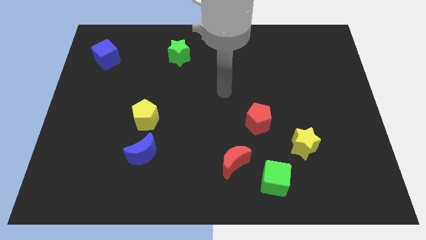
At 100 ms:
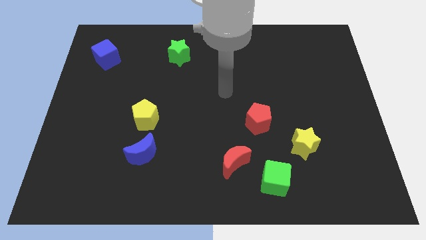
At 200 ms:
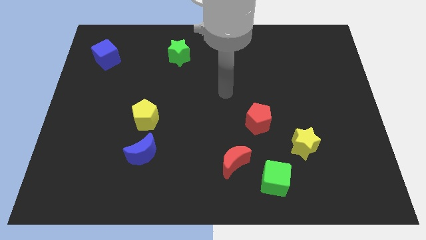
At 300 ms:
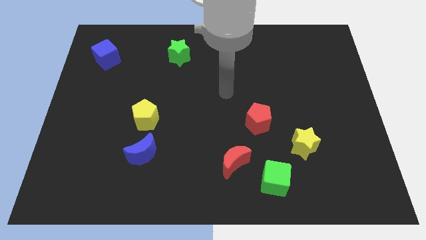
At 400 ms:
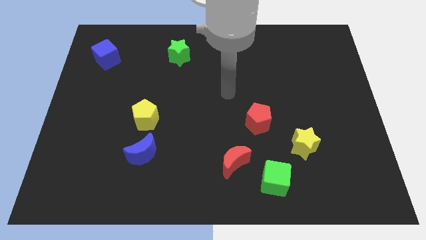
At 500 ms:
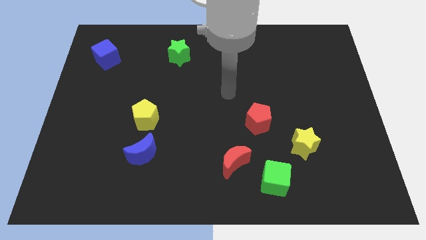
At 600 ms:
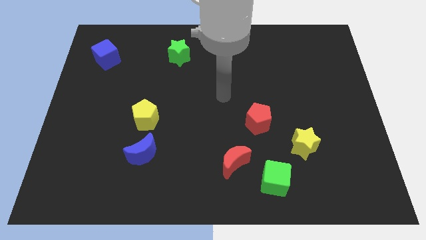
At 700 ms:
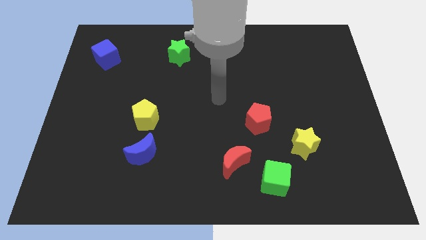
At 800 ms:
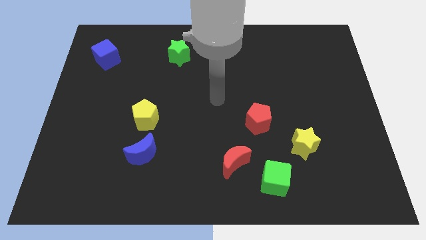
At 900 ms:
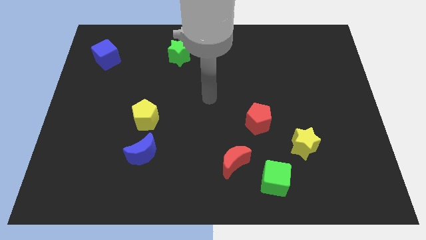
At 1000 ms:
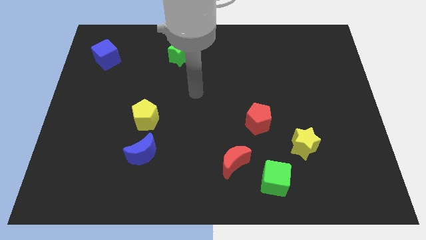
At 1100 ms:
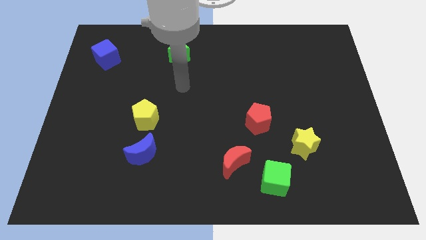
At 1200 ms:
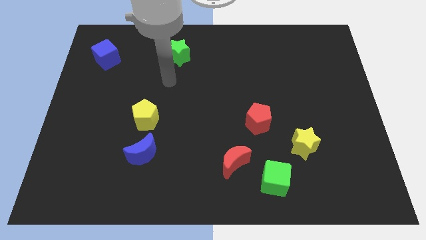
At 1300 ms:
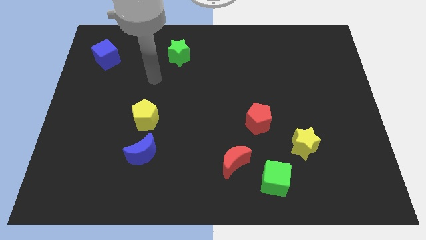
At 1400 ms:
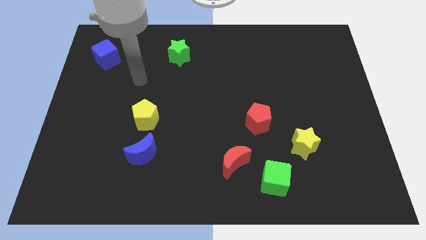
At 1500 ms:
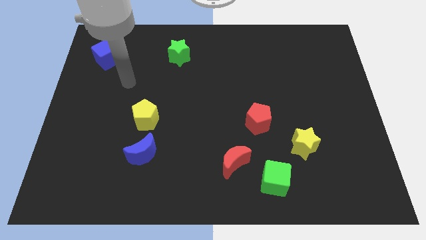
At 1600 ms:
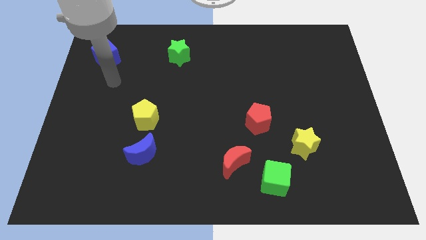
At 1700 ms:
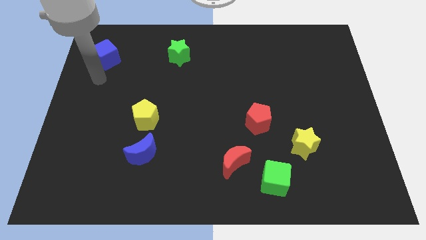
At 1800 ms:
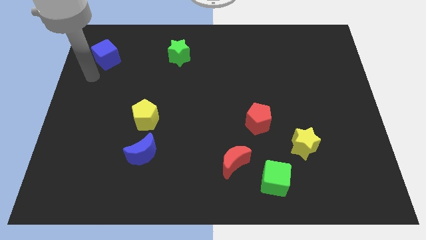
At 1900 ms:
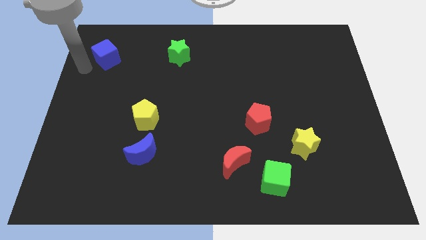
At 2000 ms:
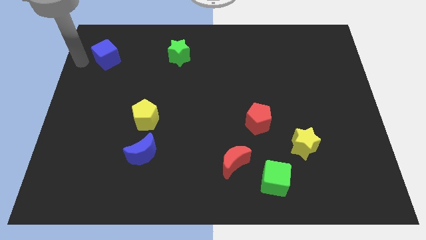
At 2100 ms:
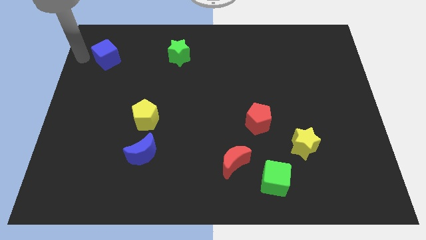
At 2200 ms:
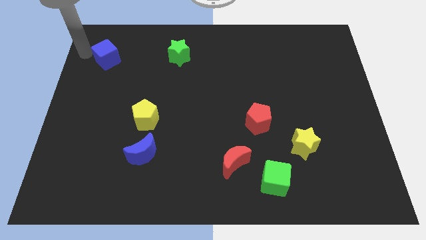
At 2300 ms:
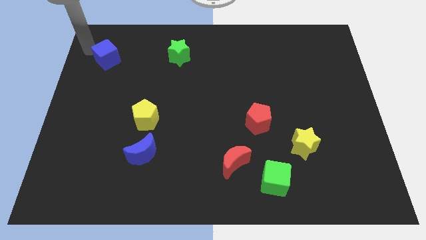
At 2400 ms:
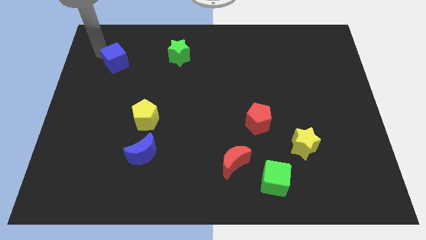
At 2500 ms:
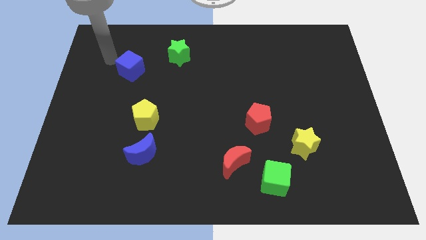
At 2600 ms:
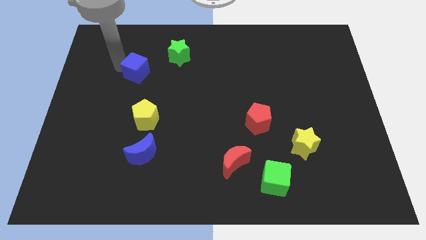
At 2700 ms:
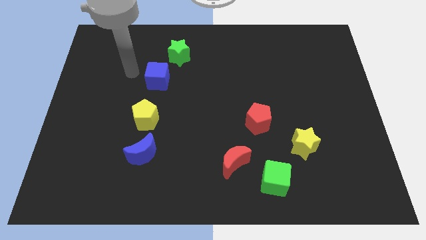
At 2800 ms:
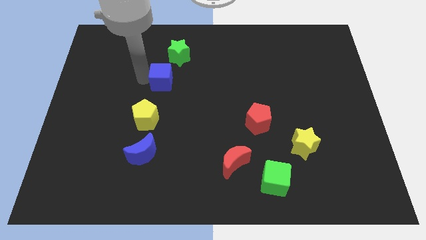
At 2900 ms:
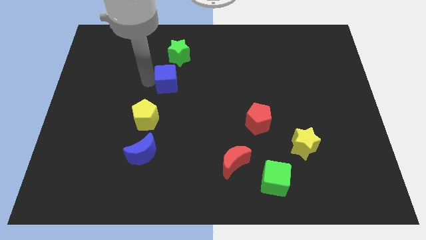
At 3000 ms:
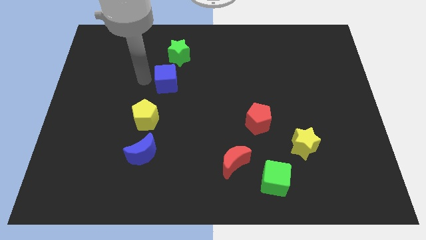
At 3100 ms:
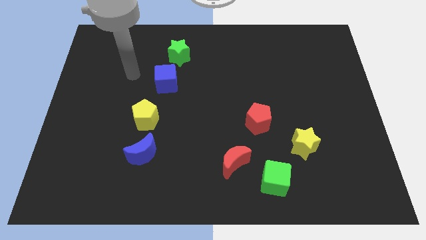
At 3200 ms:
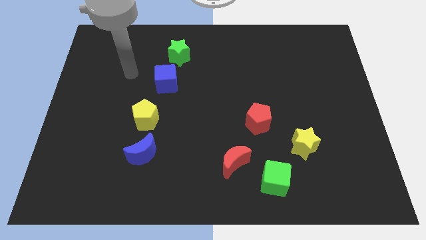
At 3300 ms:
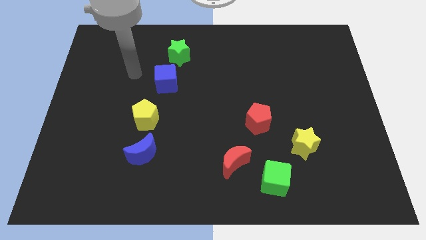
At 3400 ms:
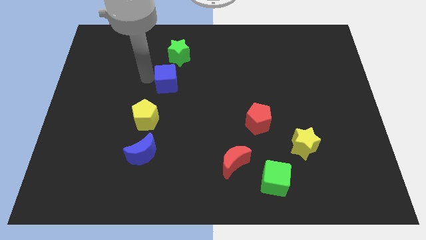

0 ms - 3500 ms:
place the blue cube diagonally in between the green star and yellow pentagon

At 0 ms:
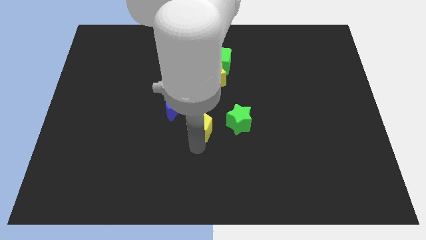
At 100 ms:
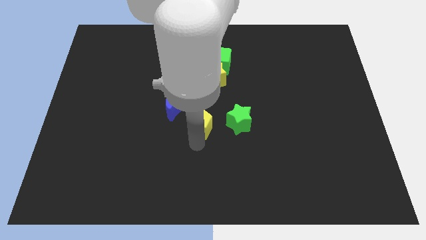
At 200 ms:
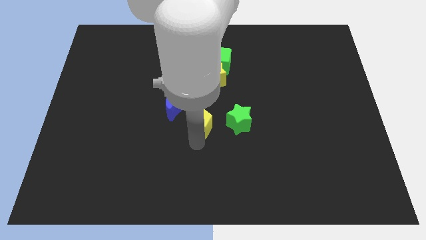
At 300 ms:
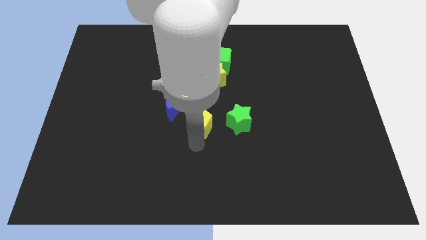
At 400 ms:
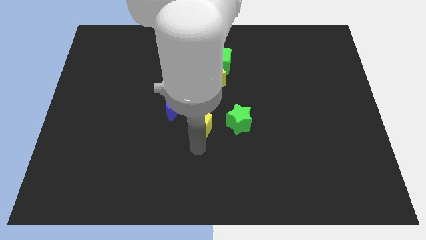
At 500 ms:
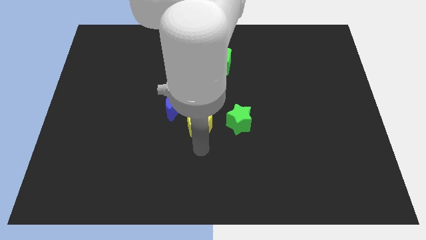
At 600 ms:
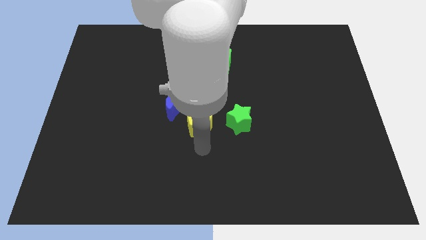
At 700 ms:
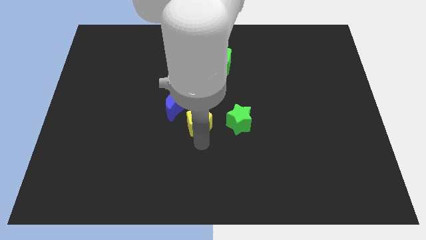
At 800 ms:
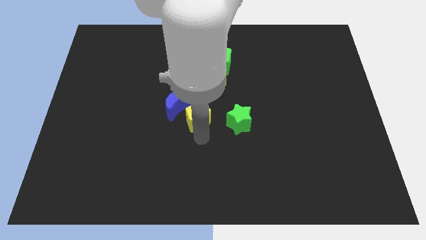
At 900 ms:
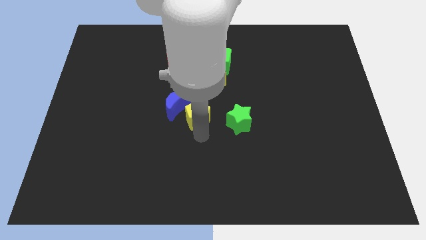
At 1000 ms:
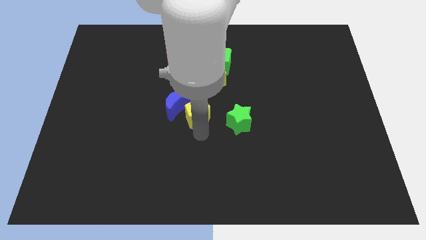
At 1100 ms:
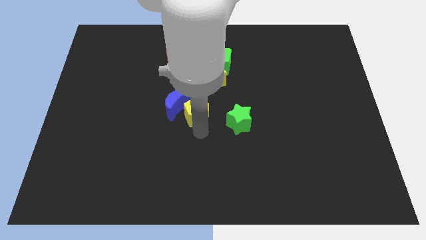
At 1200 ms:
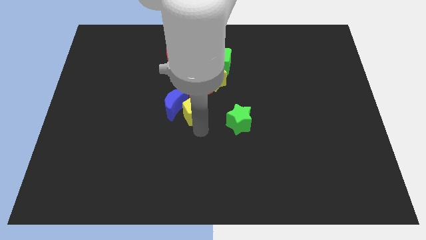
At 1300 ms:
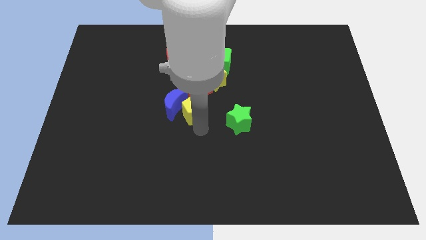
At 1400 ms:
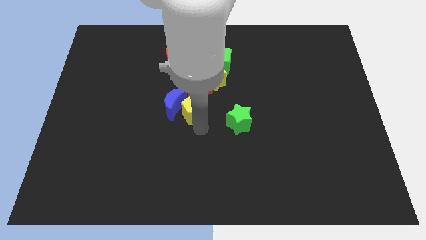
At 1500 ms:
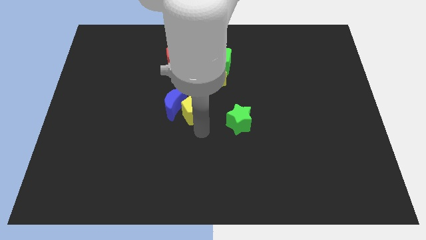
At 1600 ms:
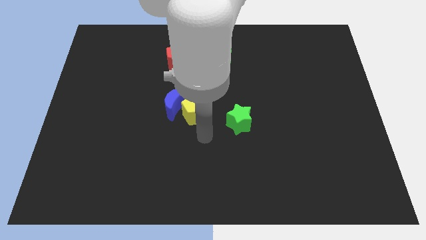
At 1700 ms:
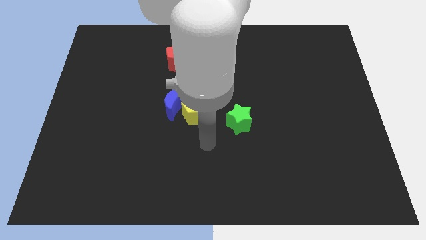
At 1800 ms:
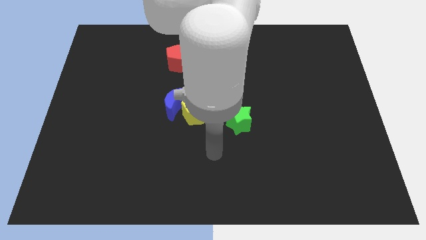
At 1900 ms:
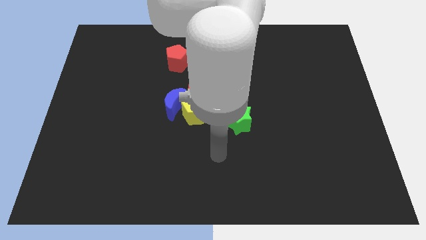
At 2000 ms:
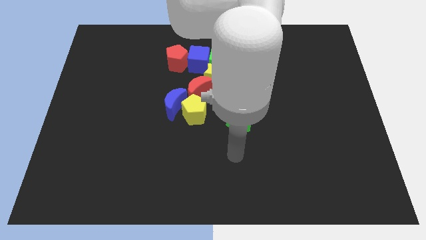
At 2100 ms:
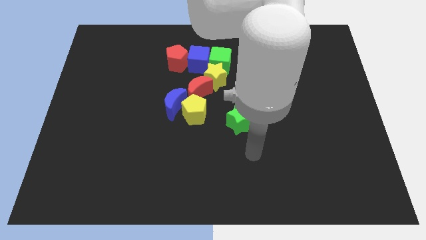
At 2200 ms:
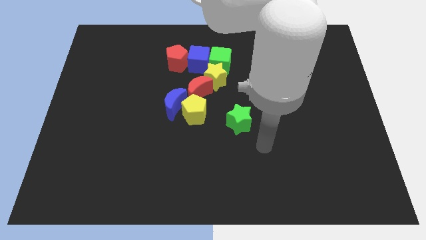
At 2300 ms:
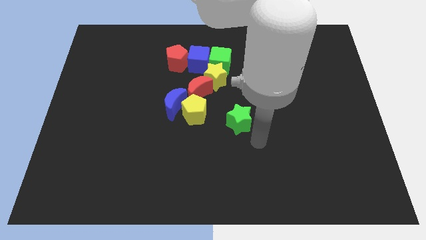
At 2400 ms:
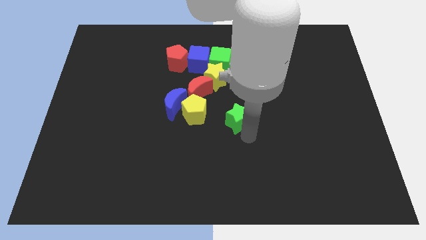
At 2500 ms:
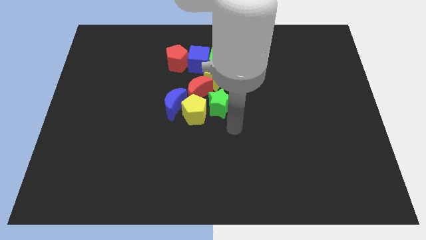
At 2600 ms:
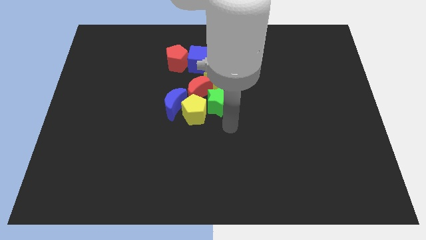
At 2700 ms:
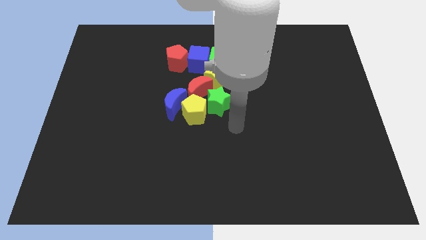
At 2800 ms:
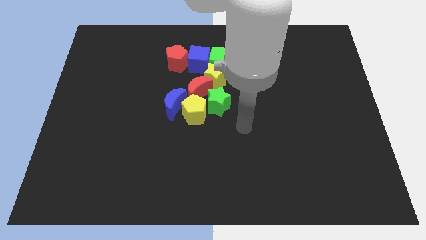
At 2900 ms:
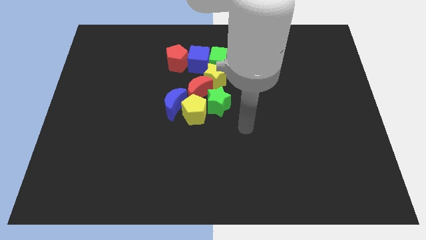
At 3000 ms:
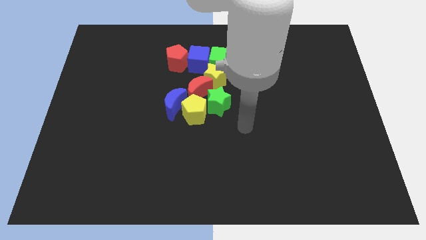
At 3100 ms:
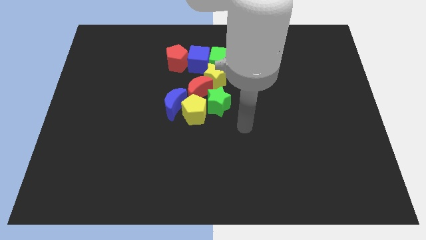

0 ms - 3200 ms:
push the yellow pentagon and green star into blue crescent and red crescent

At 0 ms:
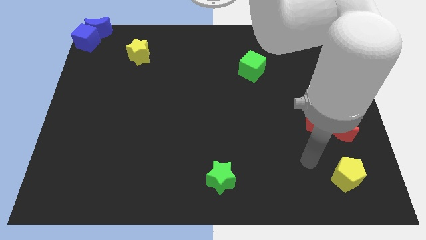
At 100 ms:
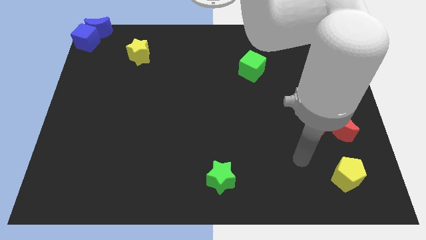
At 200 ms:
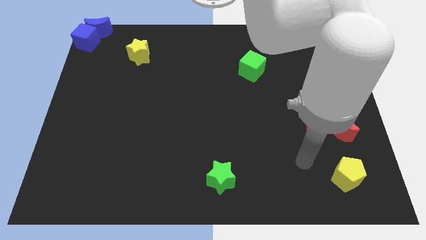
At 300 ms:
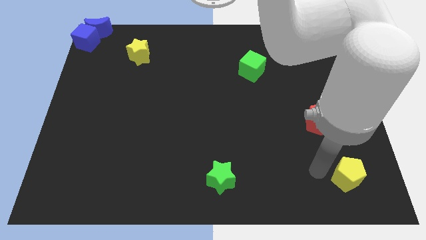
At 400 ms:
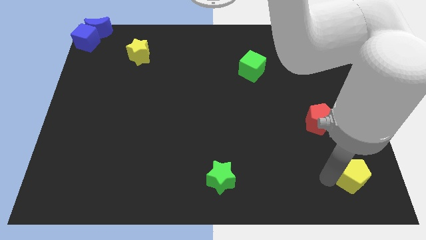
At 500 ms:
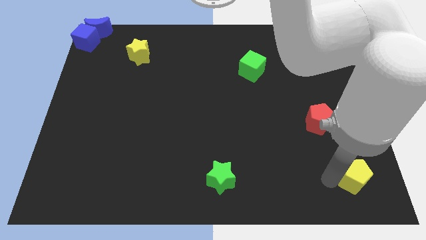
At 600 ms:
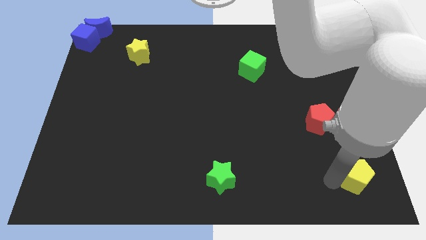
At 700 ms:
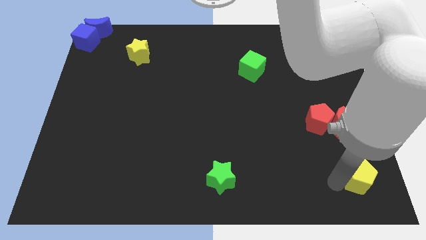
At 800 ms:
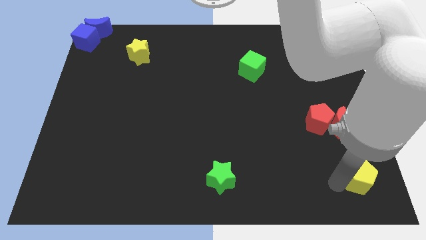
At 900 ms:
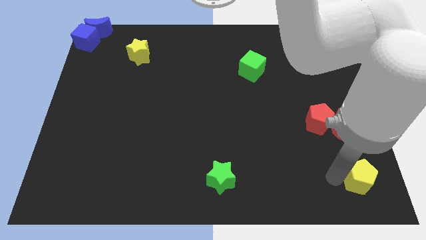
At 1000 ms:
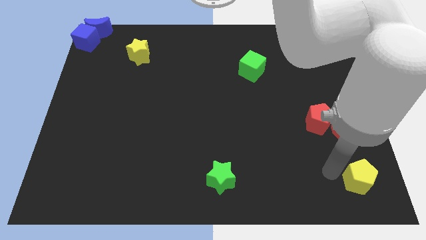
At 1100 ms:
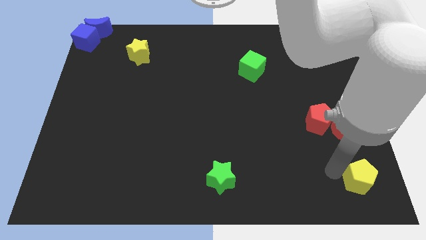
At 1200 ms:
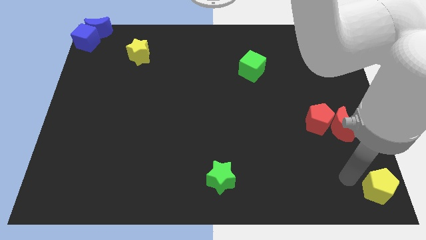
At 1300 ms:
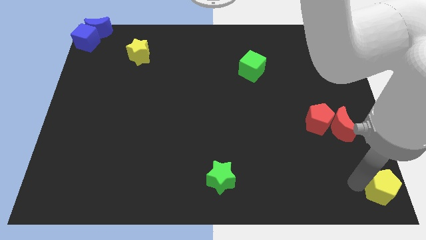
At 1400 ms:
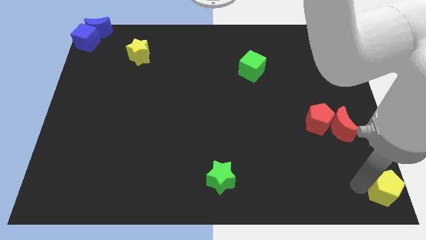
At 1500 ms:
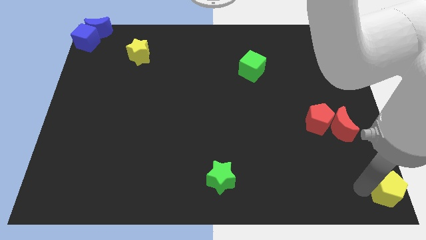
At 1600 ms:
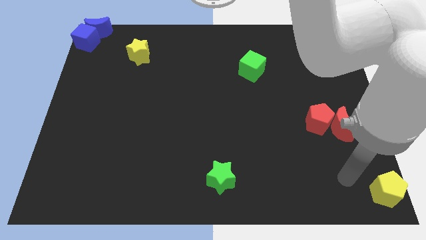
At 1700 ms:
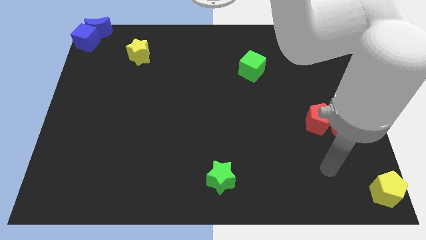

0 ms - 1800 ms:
move the yellow pentagon to the bottom right corner of the board

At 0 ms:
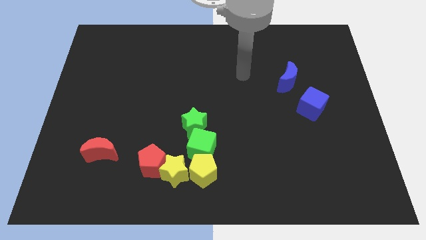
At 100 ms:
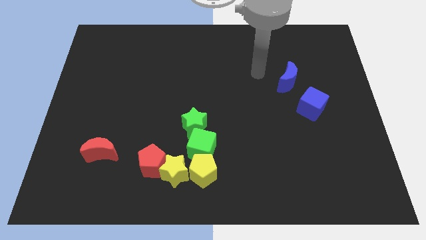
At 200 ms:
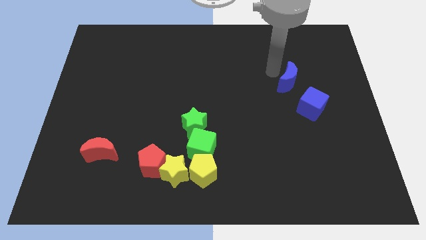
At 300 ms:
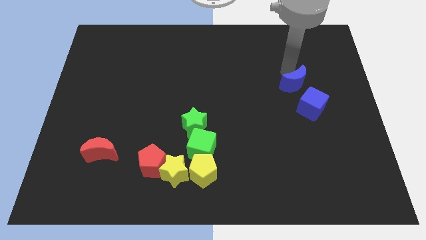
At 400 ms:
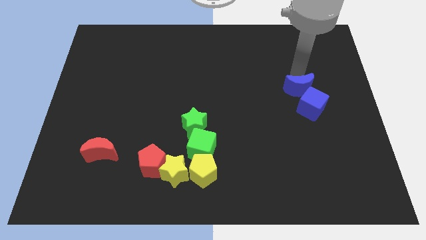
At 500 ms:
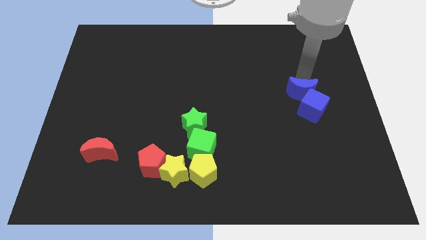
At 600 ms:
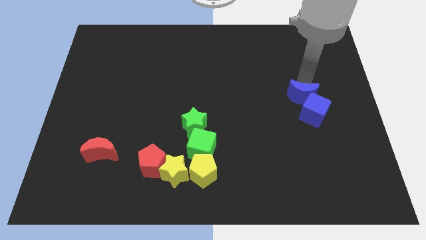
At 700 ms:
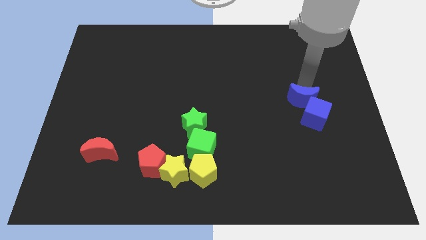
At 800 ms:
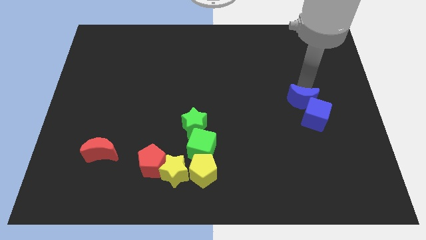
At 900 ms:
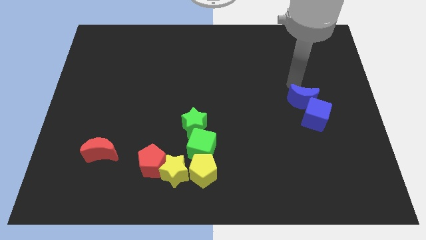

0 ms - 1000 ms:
push the blue crescent into blue cube
